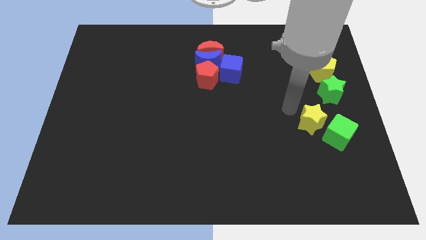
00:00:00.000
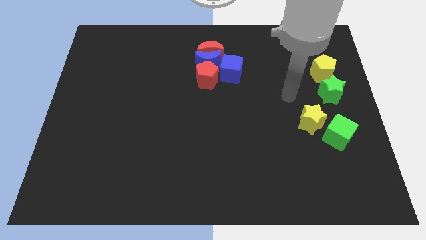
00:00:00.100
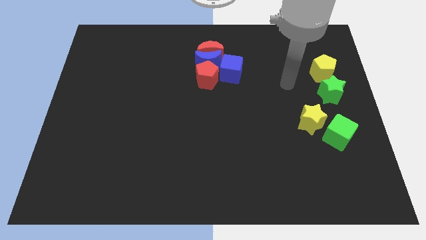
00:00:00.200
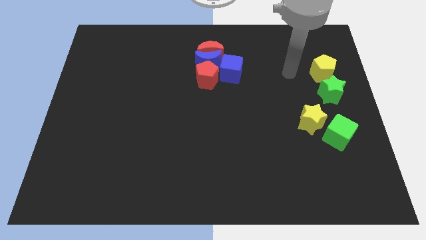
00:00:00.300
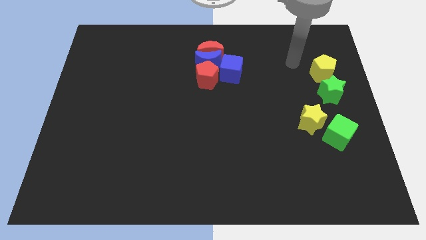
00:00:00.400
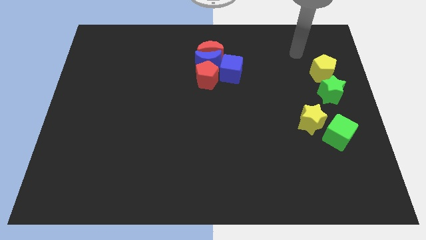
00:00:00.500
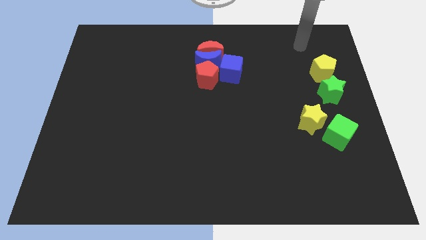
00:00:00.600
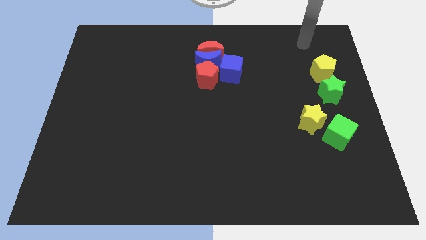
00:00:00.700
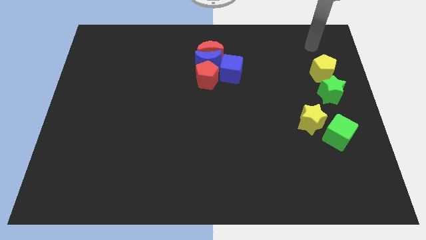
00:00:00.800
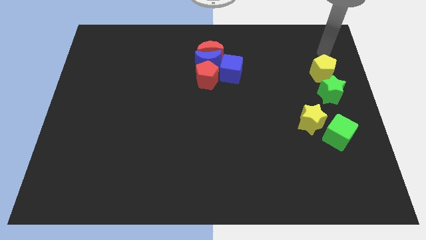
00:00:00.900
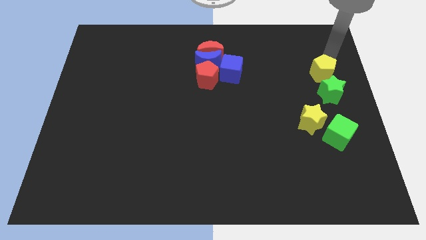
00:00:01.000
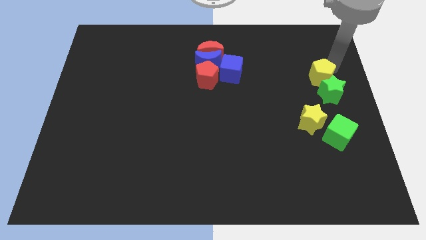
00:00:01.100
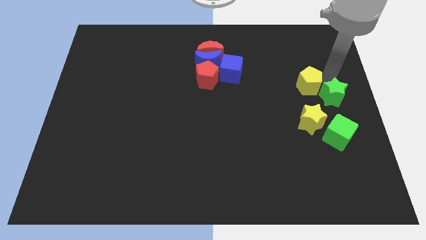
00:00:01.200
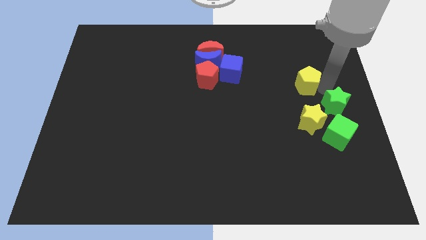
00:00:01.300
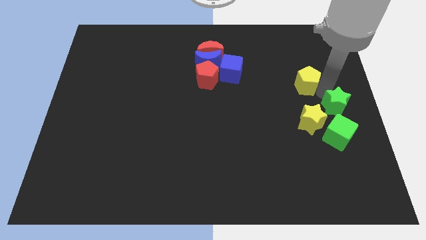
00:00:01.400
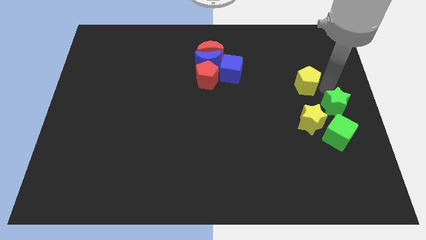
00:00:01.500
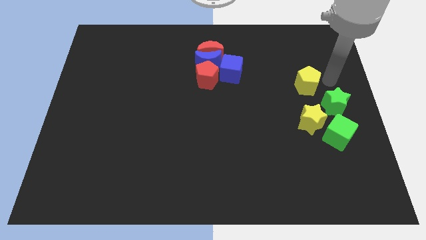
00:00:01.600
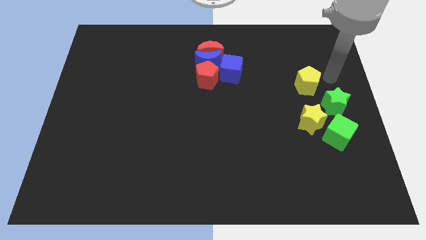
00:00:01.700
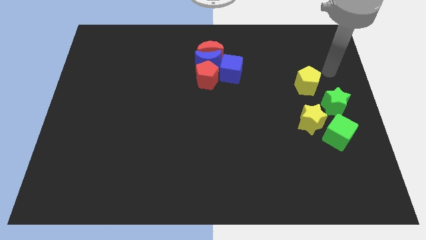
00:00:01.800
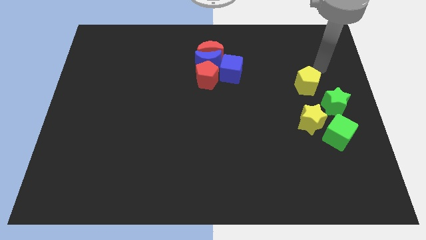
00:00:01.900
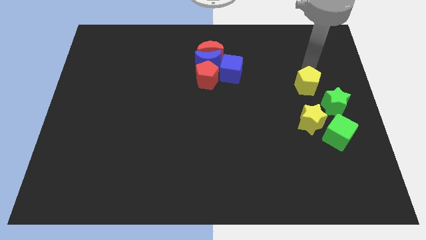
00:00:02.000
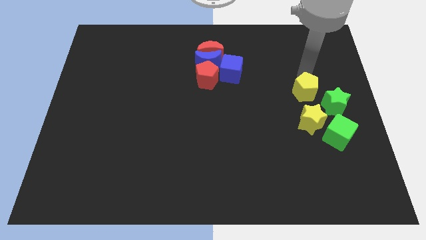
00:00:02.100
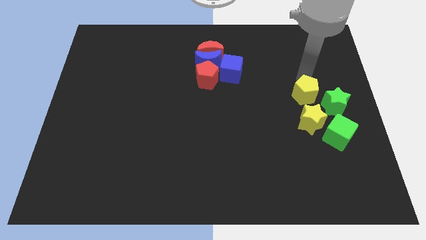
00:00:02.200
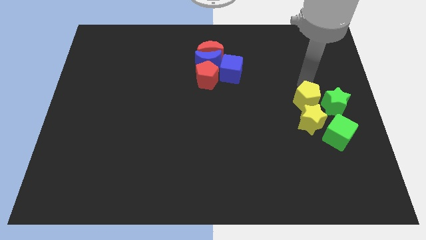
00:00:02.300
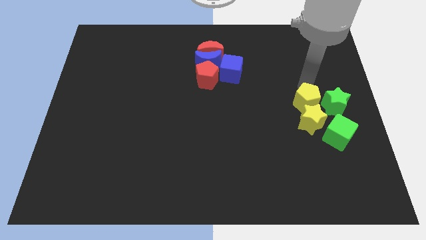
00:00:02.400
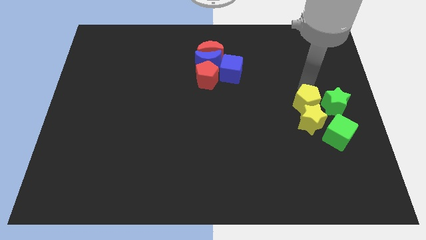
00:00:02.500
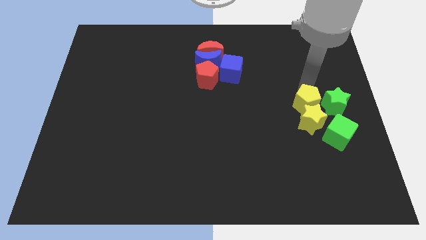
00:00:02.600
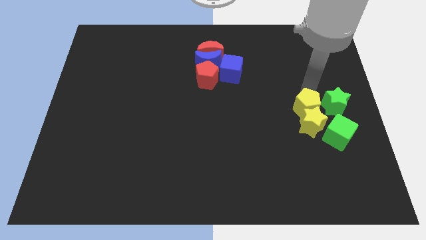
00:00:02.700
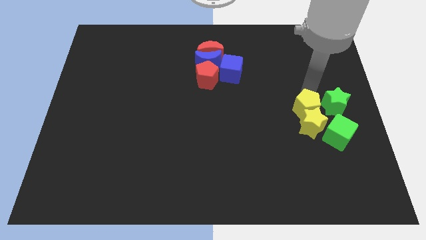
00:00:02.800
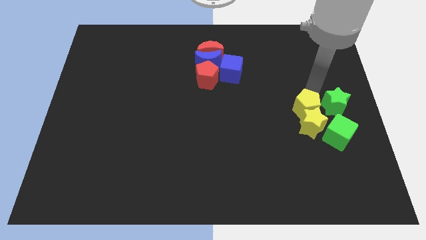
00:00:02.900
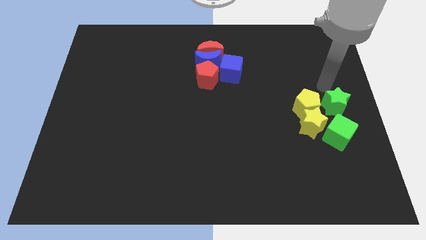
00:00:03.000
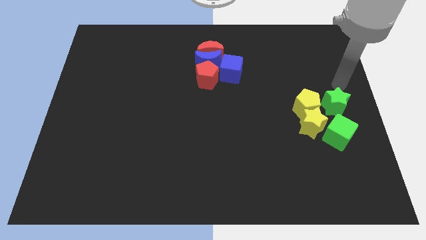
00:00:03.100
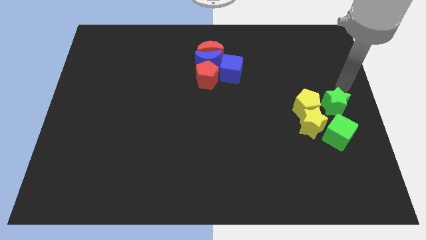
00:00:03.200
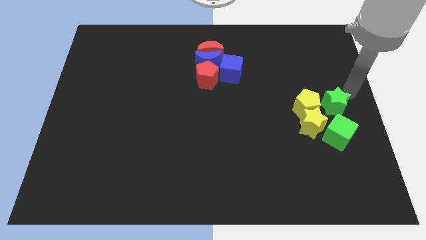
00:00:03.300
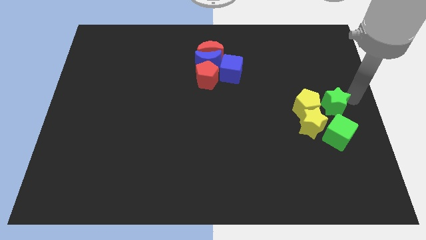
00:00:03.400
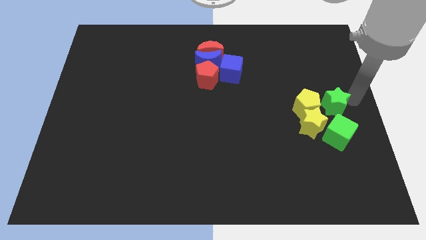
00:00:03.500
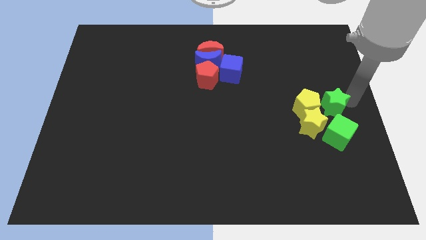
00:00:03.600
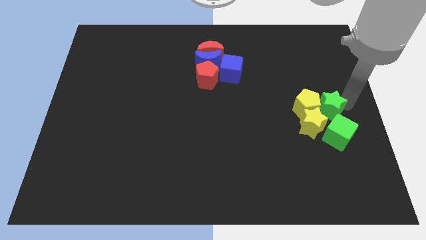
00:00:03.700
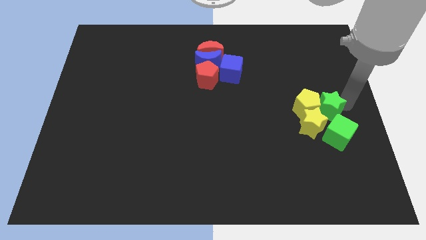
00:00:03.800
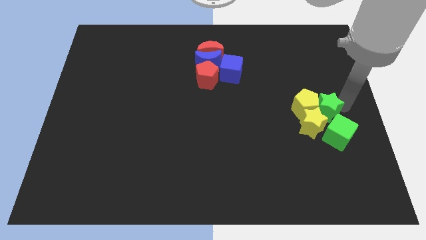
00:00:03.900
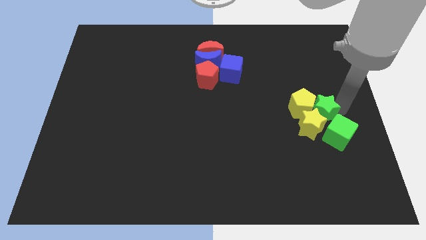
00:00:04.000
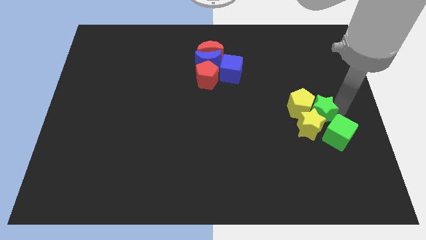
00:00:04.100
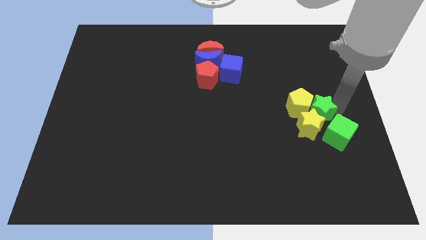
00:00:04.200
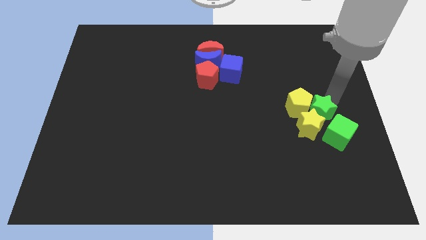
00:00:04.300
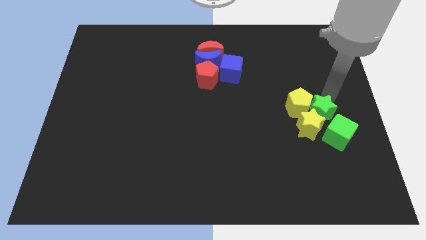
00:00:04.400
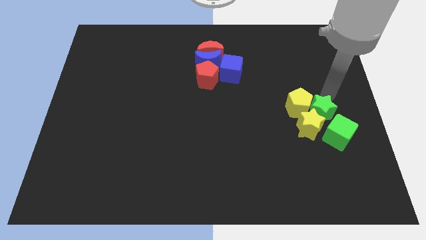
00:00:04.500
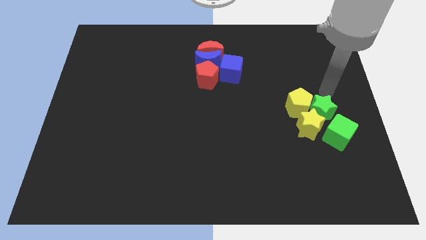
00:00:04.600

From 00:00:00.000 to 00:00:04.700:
group up the yellow blocks with the green objects at the right side of the table

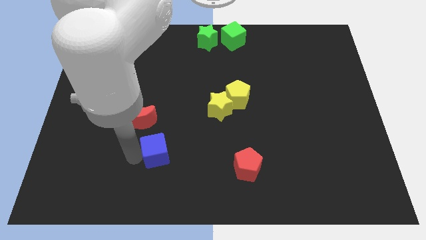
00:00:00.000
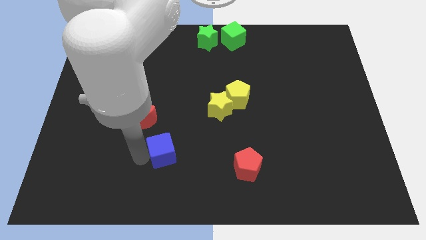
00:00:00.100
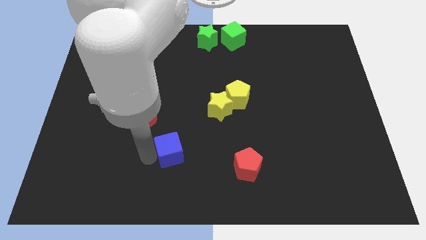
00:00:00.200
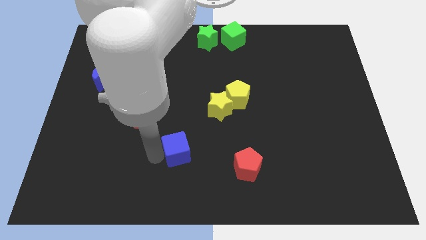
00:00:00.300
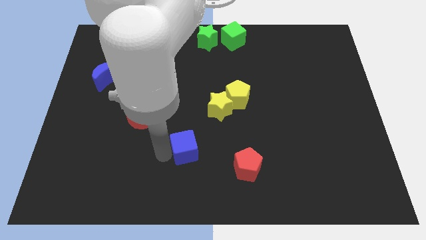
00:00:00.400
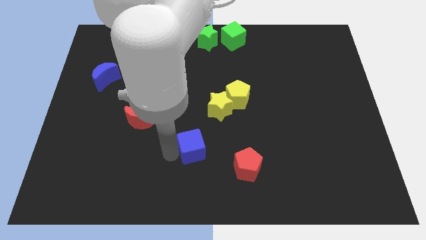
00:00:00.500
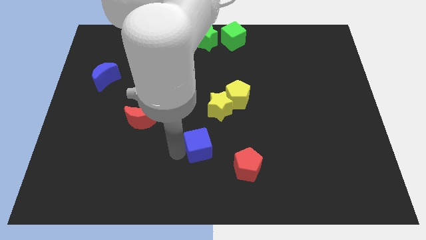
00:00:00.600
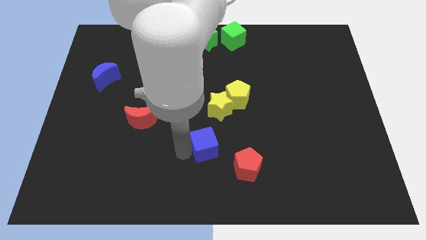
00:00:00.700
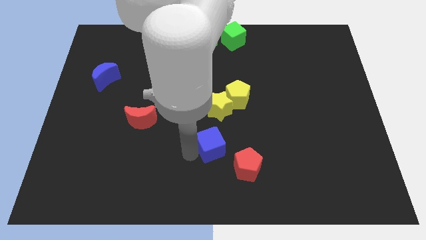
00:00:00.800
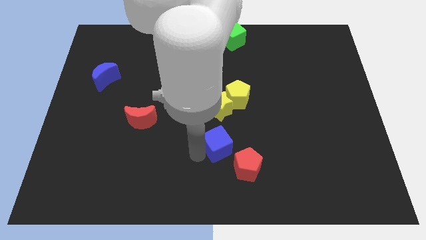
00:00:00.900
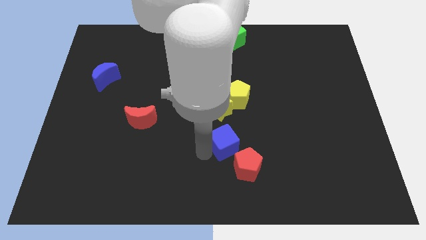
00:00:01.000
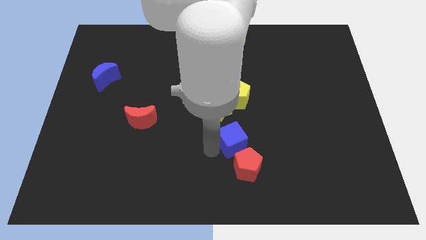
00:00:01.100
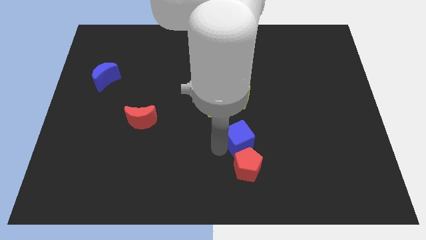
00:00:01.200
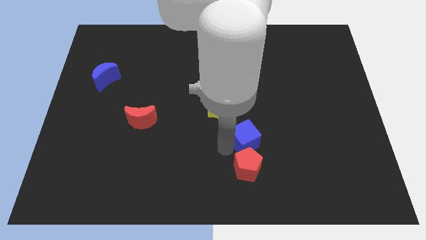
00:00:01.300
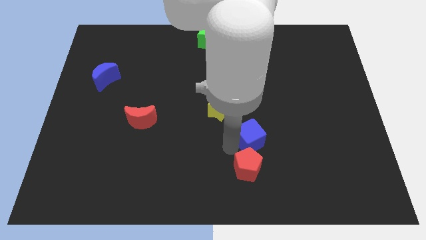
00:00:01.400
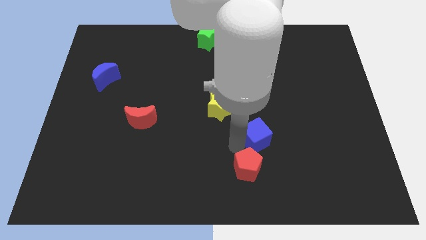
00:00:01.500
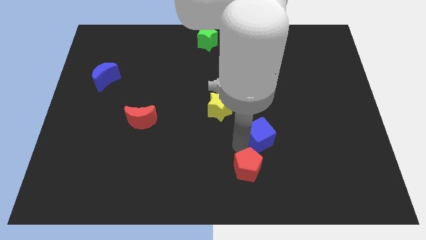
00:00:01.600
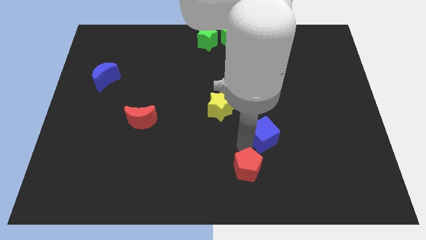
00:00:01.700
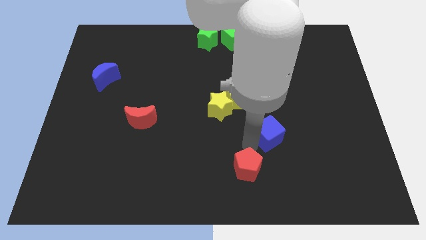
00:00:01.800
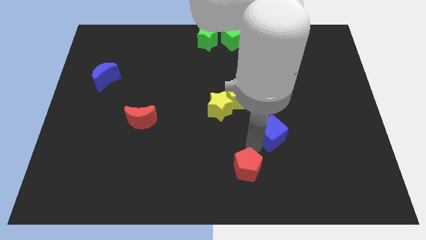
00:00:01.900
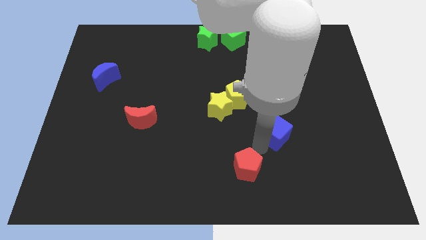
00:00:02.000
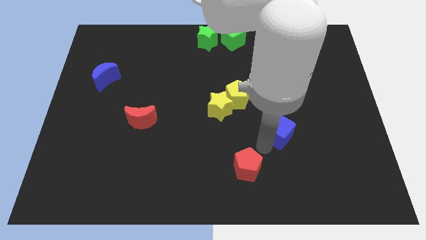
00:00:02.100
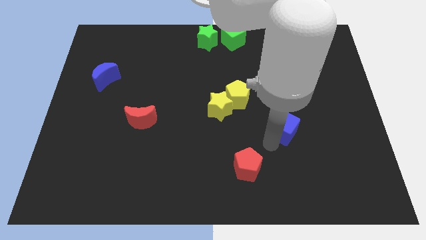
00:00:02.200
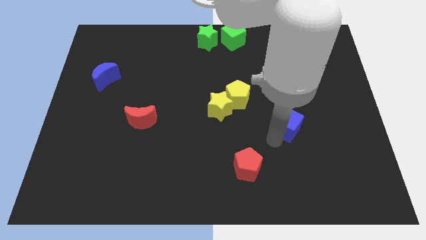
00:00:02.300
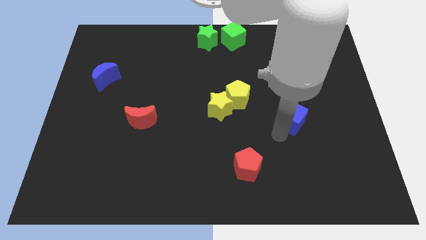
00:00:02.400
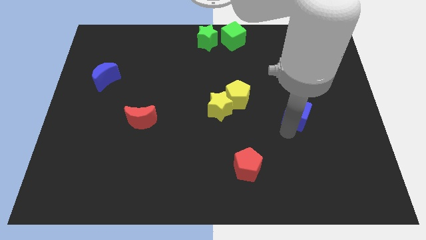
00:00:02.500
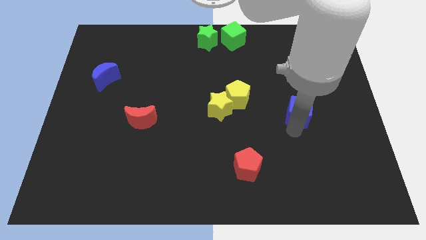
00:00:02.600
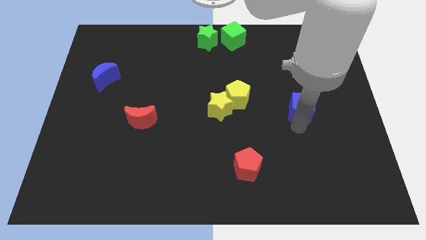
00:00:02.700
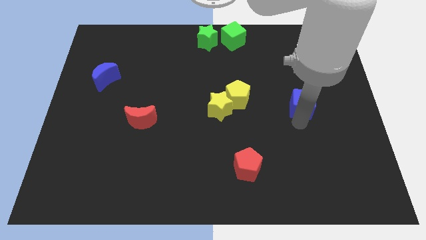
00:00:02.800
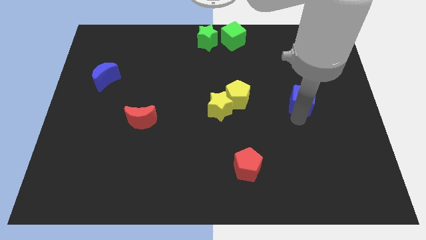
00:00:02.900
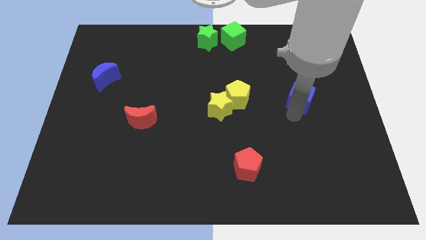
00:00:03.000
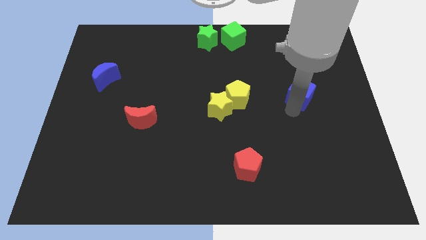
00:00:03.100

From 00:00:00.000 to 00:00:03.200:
adjust the blue cube horizontal to the yellow pentagon on the right

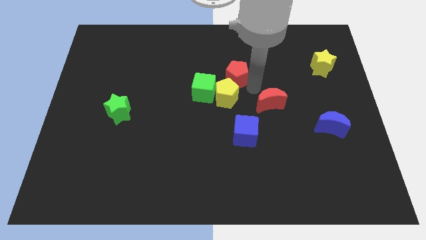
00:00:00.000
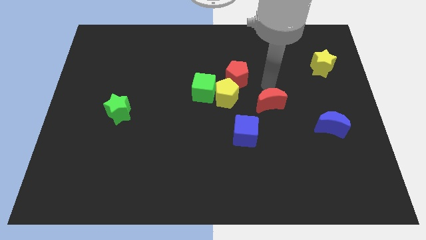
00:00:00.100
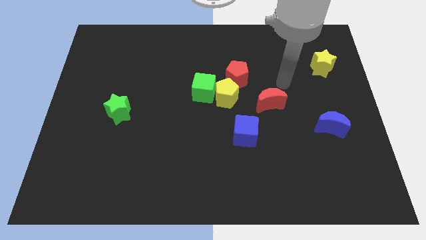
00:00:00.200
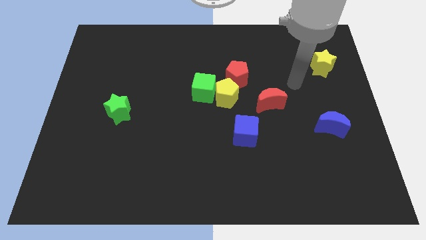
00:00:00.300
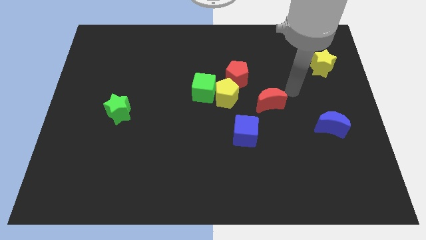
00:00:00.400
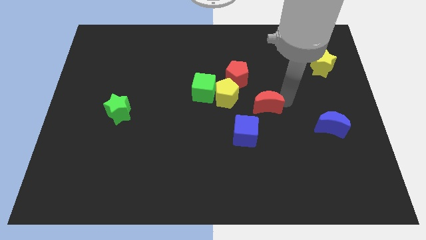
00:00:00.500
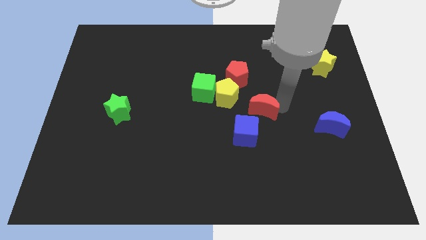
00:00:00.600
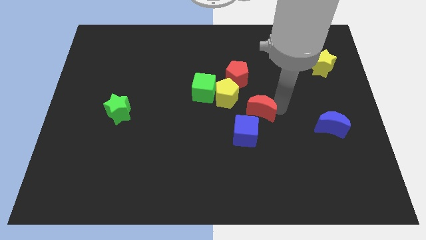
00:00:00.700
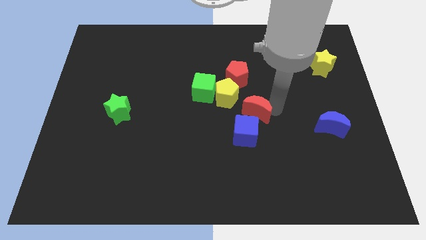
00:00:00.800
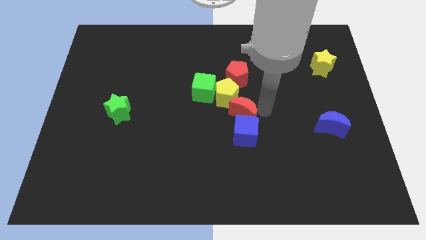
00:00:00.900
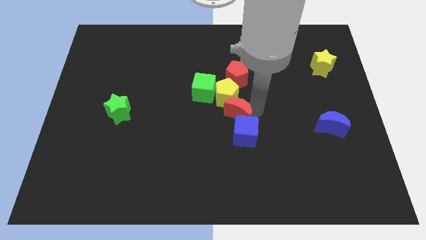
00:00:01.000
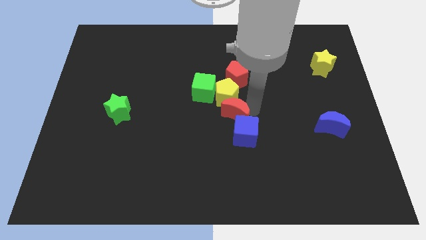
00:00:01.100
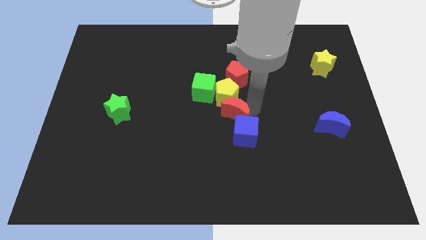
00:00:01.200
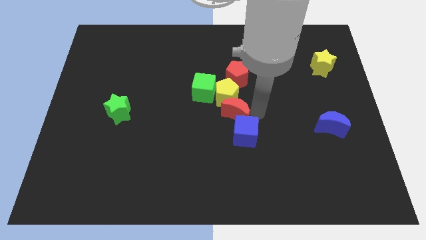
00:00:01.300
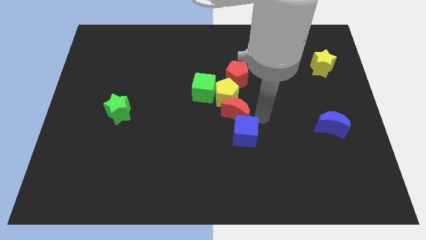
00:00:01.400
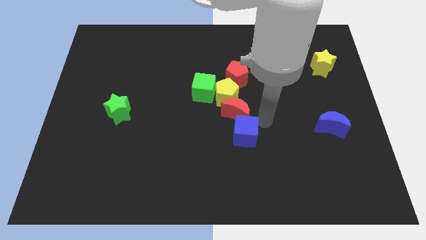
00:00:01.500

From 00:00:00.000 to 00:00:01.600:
place the red moon in between the blue cube and yellow pentagon
